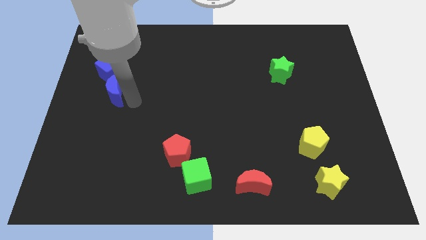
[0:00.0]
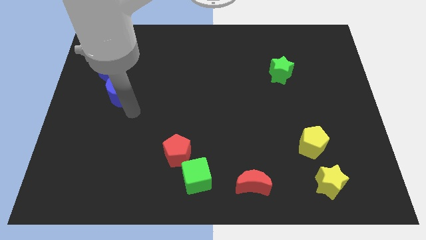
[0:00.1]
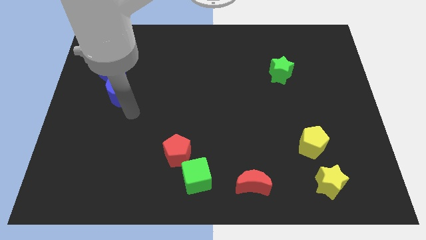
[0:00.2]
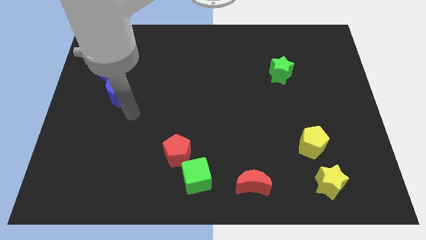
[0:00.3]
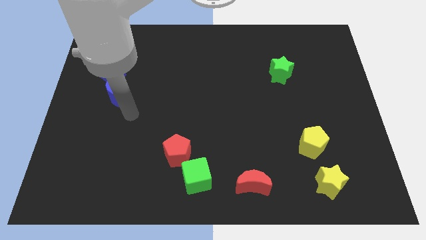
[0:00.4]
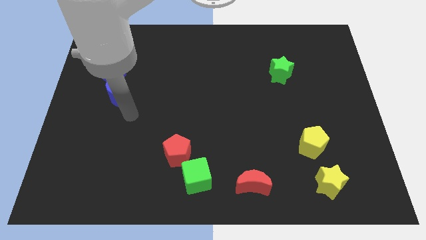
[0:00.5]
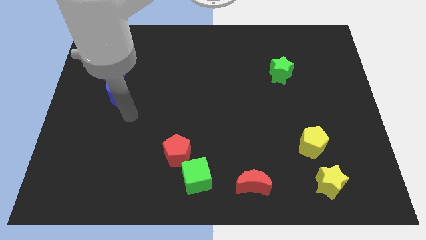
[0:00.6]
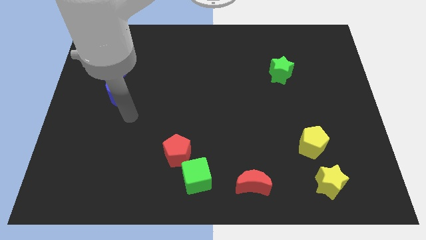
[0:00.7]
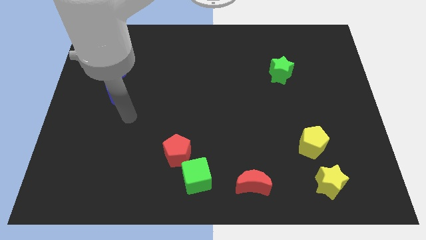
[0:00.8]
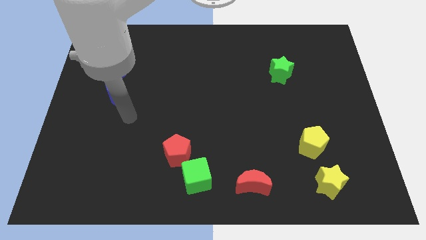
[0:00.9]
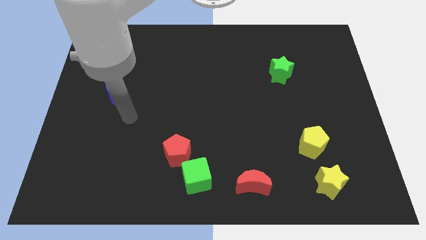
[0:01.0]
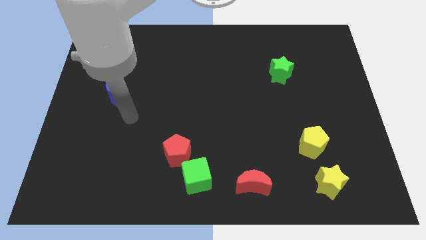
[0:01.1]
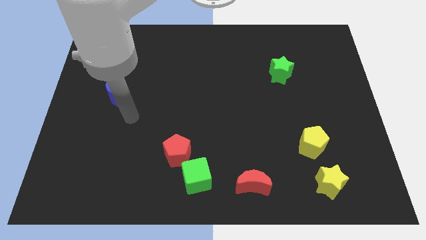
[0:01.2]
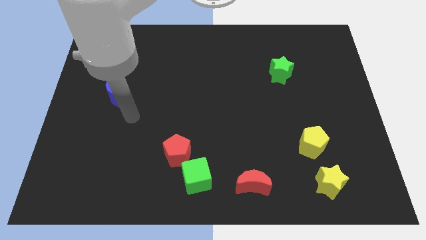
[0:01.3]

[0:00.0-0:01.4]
move the arm away from the blue crescent

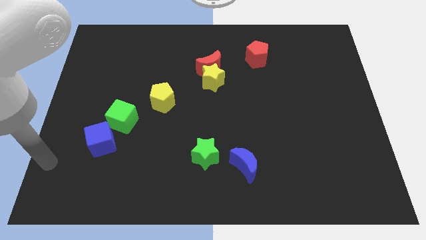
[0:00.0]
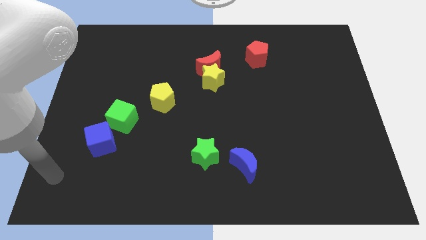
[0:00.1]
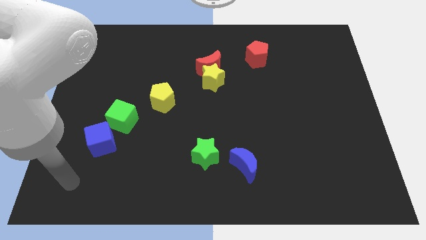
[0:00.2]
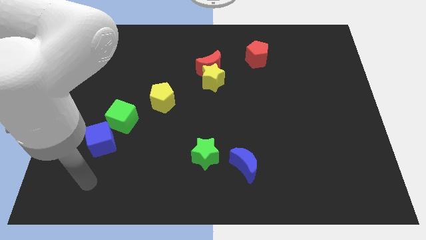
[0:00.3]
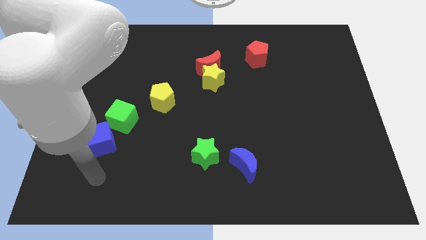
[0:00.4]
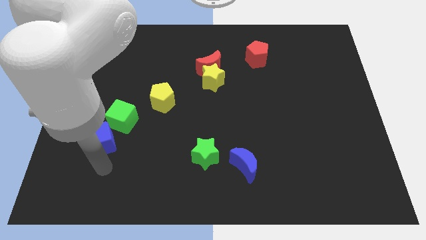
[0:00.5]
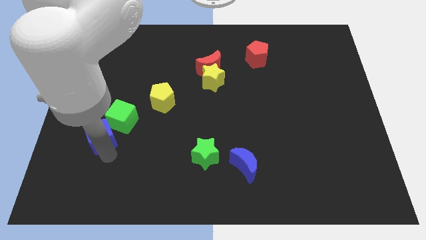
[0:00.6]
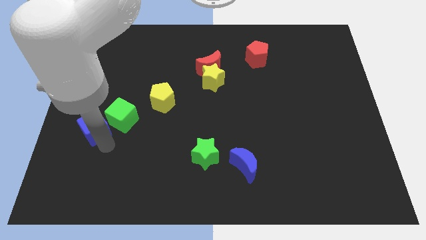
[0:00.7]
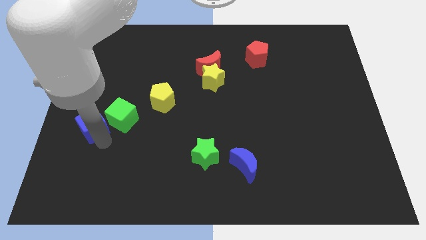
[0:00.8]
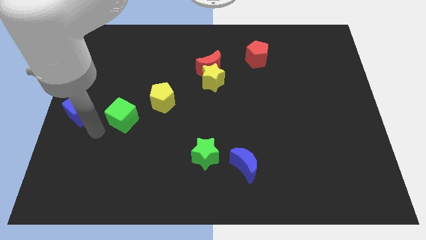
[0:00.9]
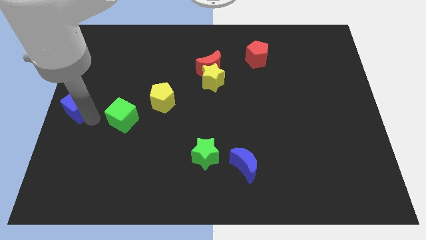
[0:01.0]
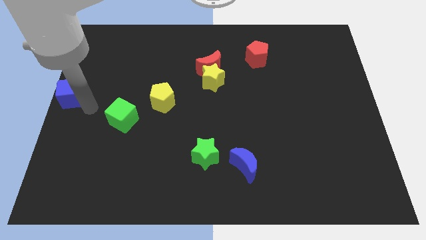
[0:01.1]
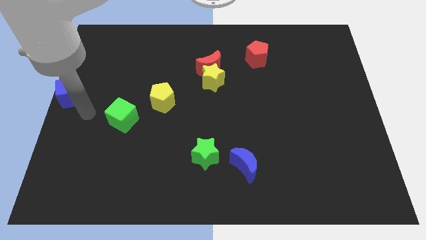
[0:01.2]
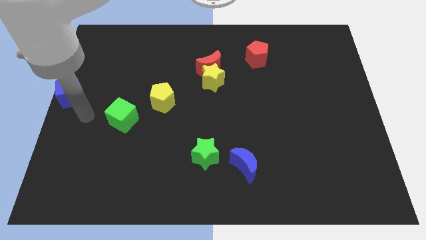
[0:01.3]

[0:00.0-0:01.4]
separate the blue cube from the green cube

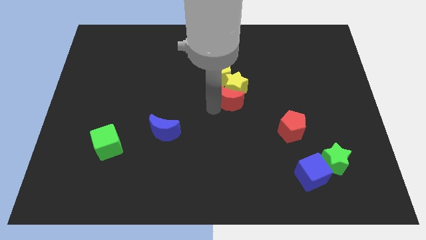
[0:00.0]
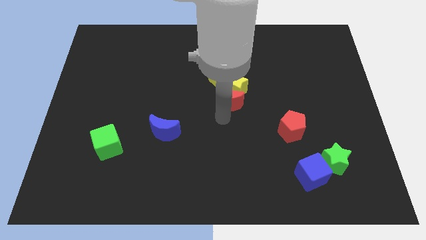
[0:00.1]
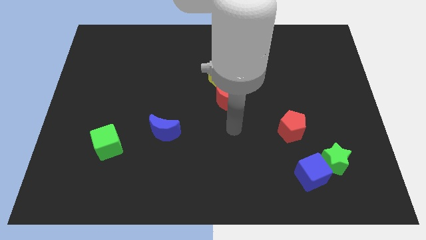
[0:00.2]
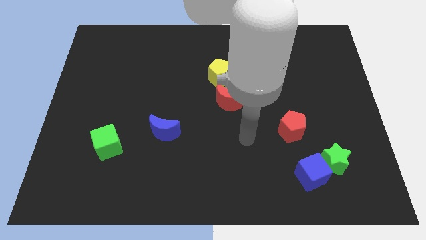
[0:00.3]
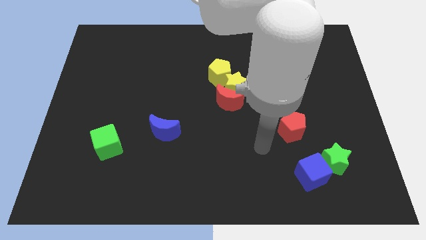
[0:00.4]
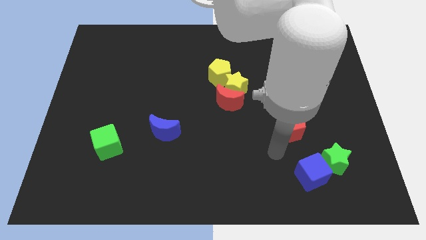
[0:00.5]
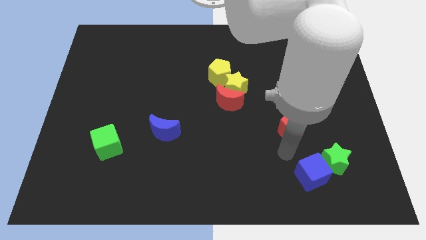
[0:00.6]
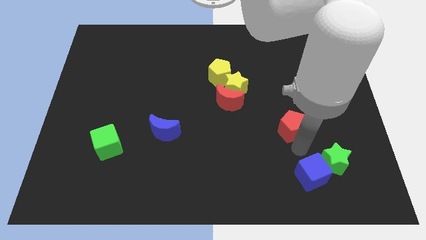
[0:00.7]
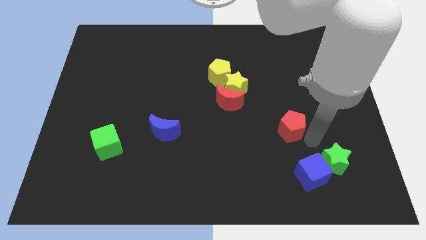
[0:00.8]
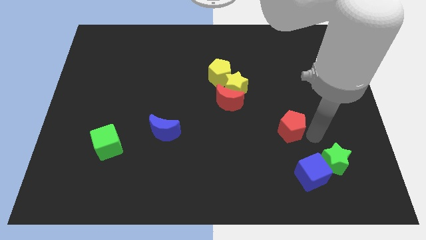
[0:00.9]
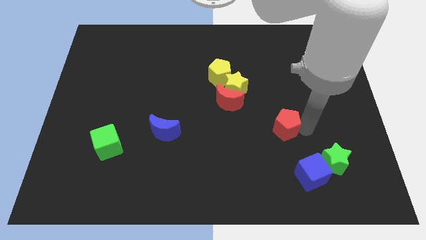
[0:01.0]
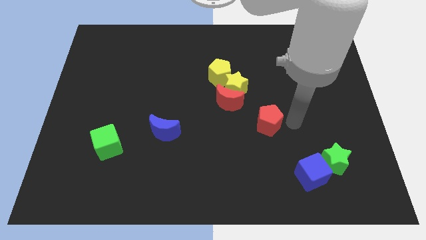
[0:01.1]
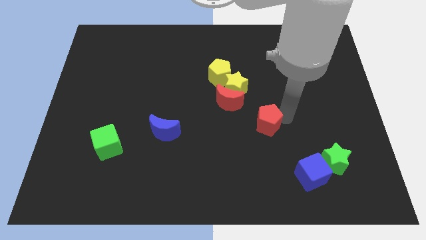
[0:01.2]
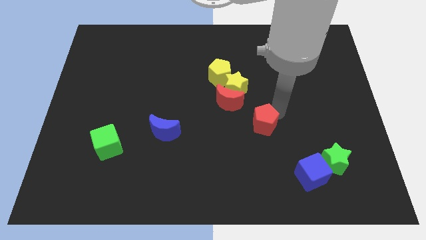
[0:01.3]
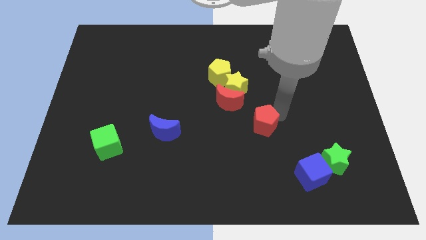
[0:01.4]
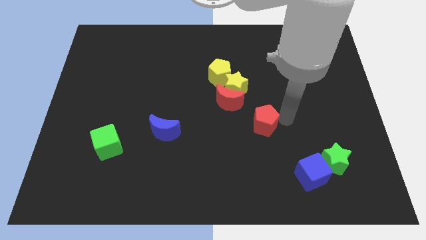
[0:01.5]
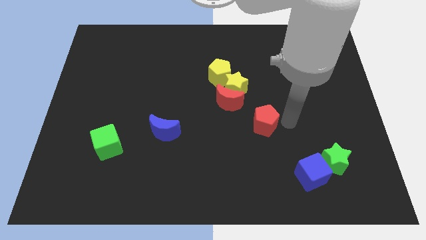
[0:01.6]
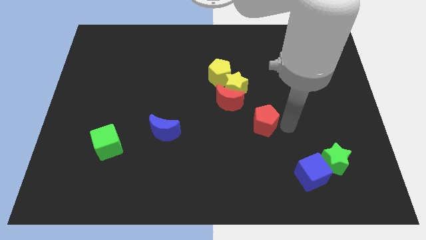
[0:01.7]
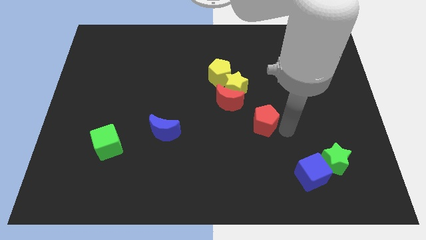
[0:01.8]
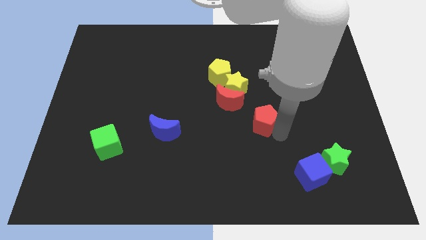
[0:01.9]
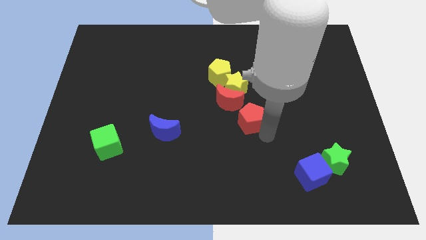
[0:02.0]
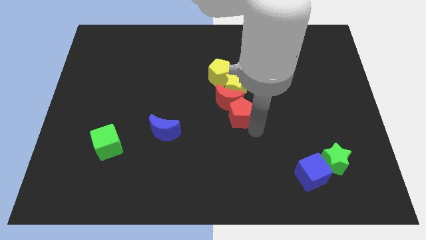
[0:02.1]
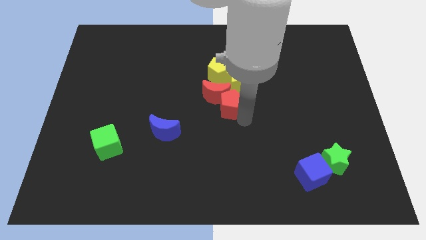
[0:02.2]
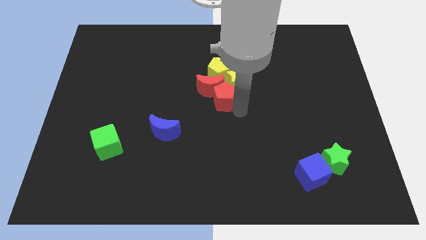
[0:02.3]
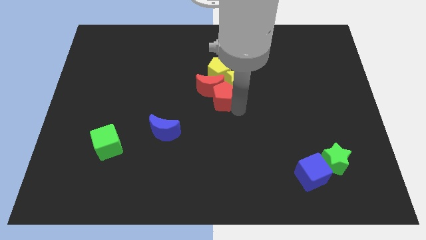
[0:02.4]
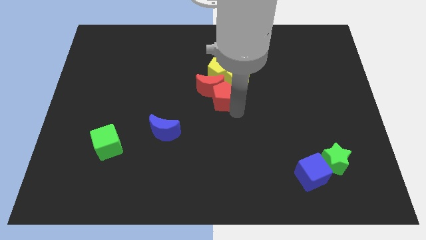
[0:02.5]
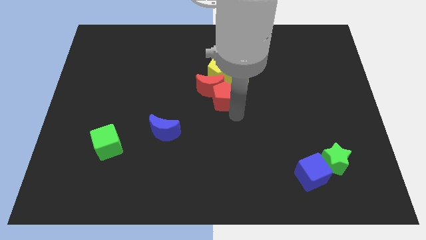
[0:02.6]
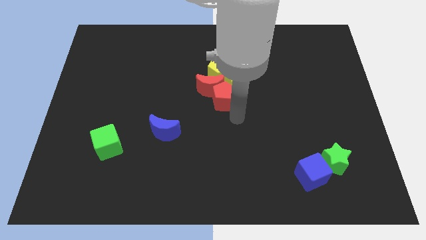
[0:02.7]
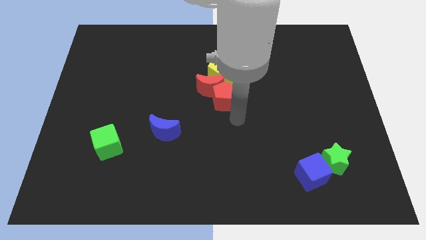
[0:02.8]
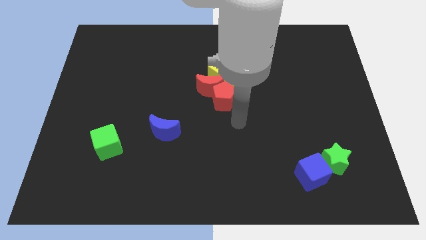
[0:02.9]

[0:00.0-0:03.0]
push the red pentagon into the red moon

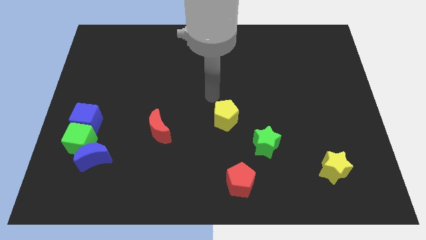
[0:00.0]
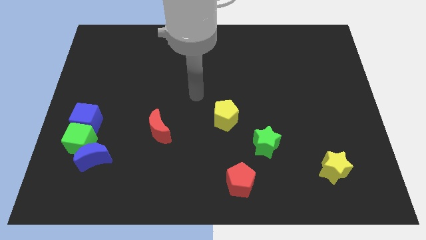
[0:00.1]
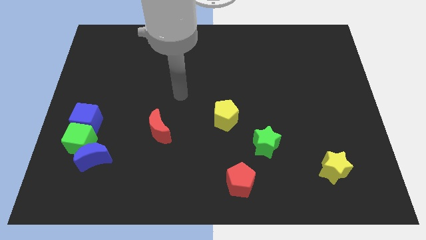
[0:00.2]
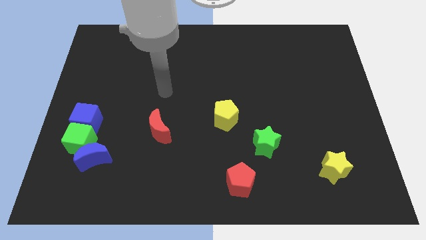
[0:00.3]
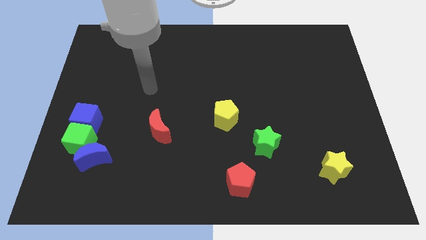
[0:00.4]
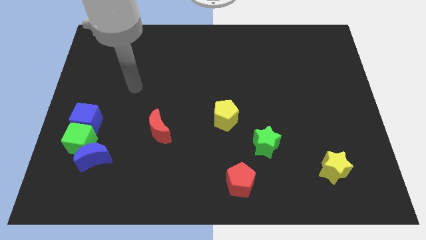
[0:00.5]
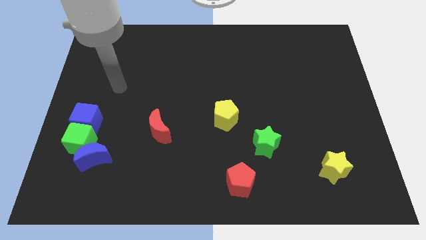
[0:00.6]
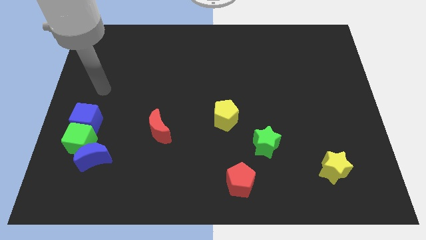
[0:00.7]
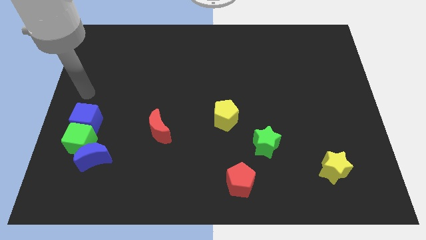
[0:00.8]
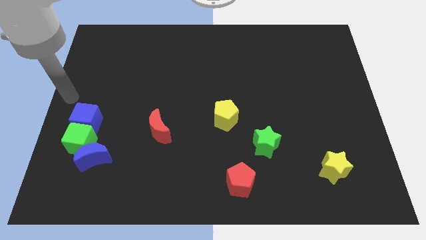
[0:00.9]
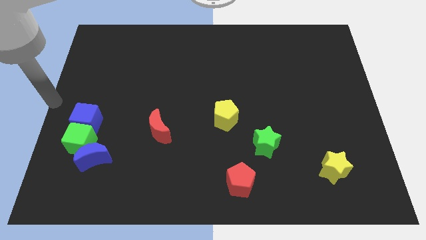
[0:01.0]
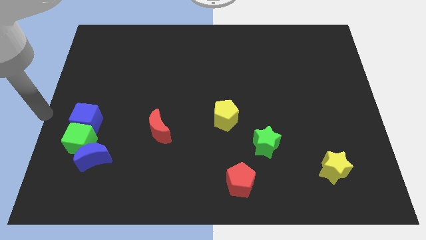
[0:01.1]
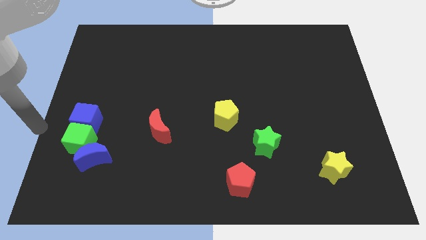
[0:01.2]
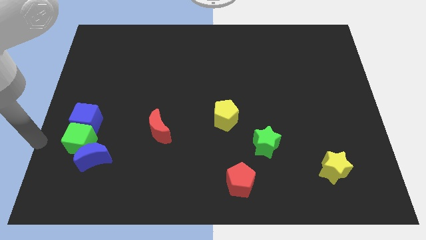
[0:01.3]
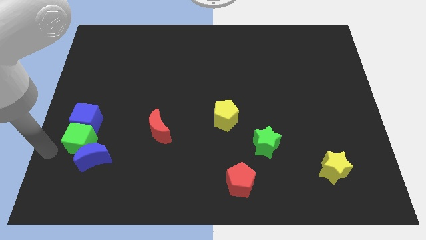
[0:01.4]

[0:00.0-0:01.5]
move your arm to the left side of the green cube

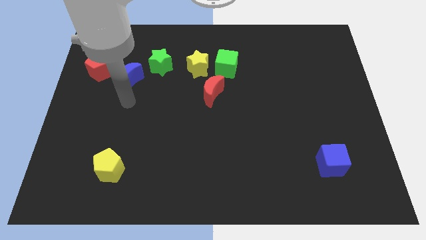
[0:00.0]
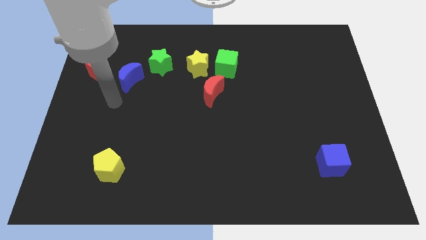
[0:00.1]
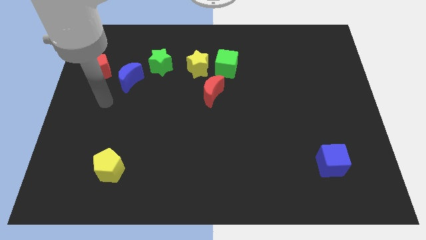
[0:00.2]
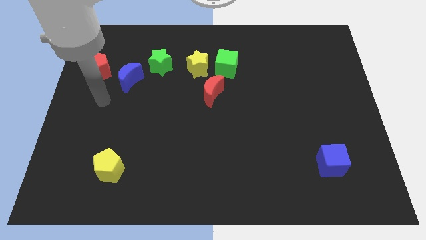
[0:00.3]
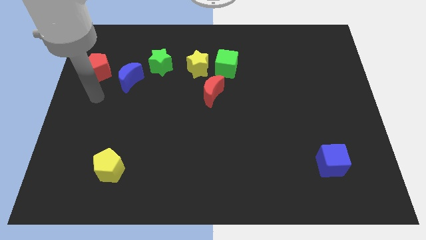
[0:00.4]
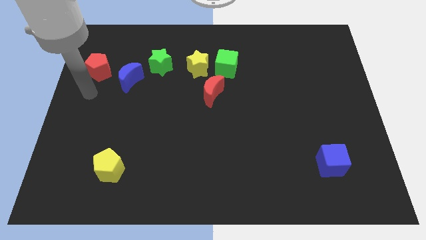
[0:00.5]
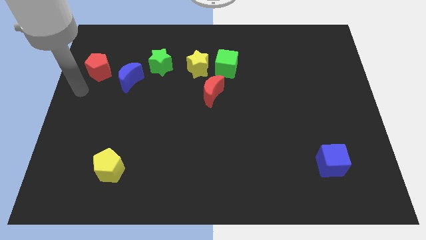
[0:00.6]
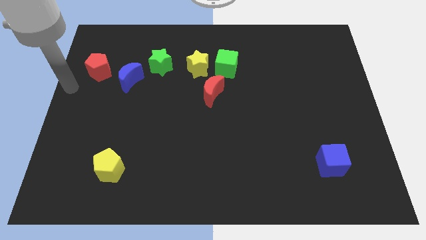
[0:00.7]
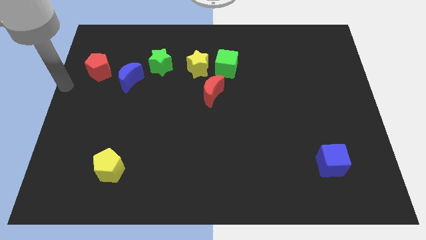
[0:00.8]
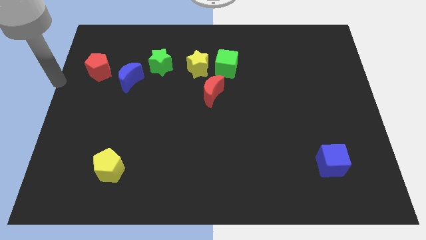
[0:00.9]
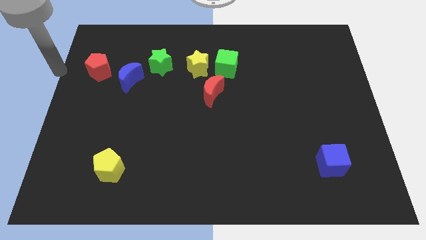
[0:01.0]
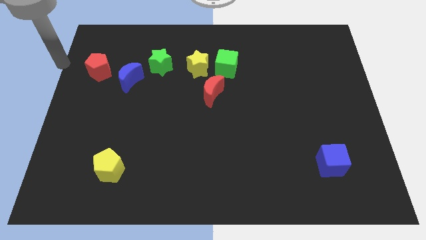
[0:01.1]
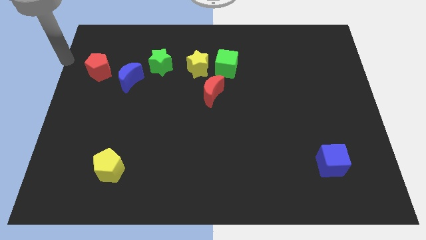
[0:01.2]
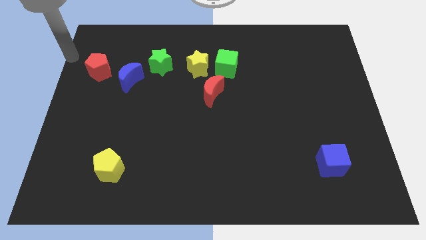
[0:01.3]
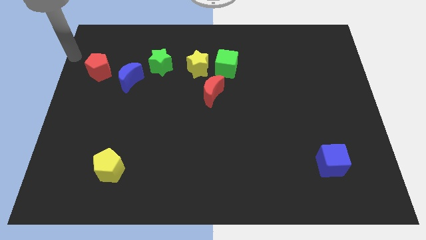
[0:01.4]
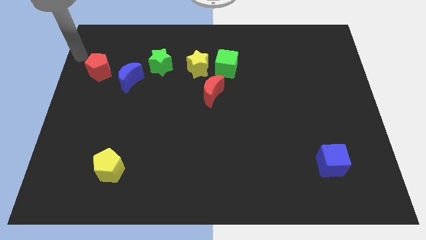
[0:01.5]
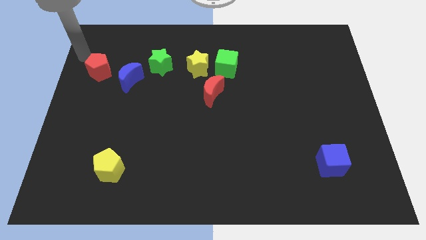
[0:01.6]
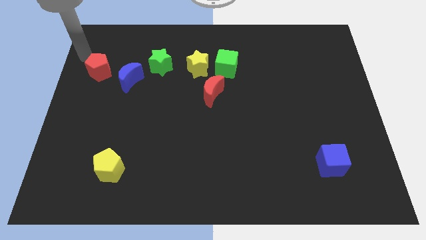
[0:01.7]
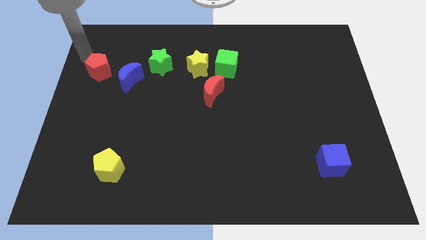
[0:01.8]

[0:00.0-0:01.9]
place the arm diagonal to the red pentagon
